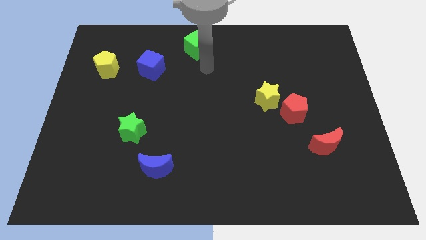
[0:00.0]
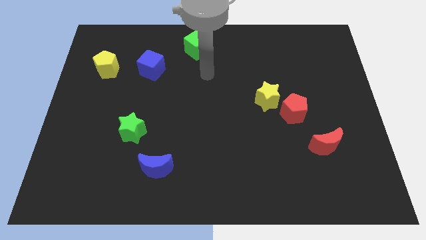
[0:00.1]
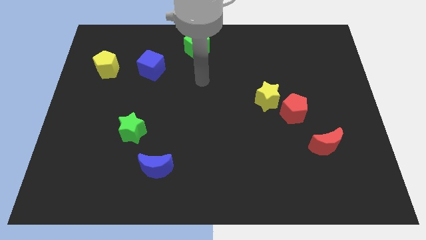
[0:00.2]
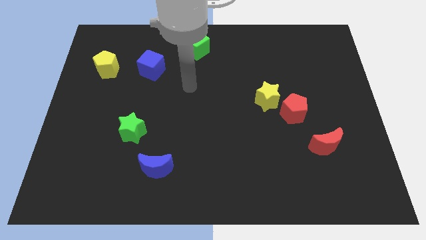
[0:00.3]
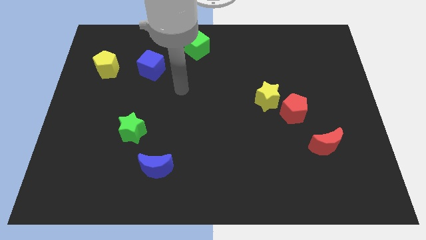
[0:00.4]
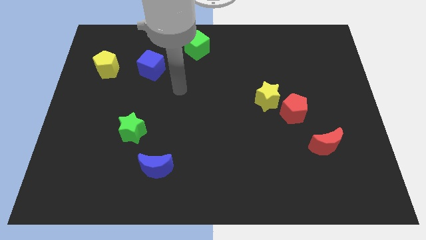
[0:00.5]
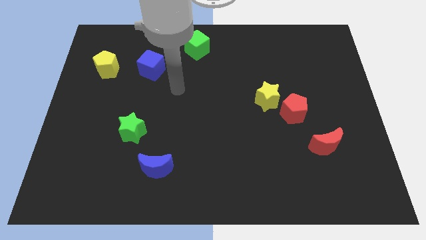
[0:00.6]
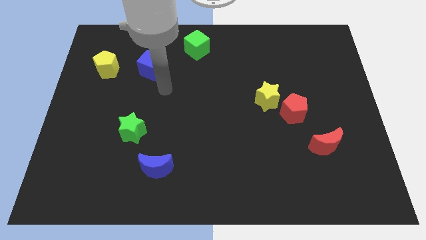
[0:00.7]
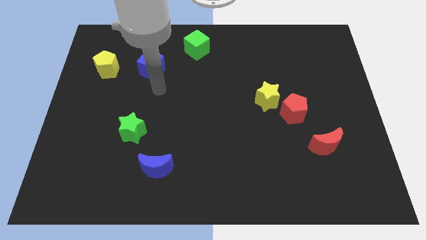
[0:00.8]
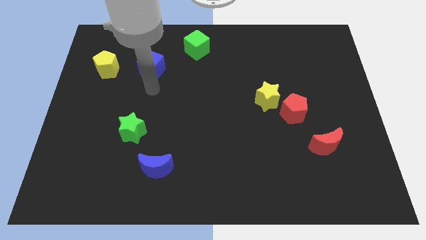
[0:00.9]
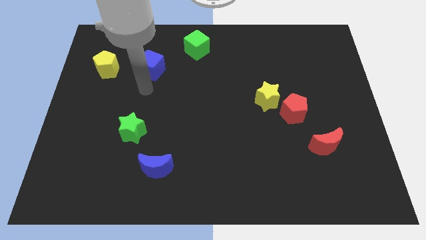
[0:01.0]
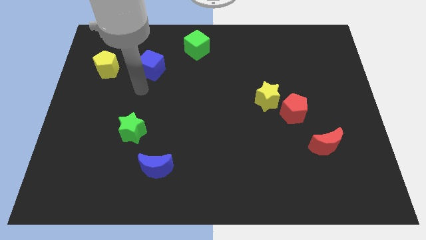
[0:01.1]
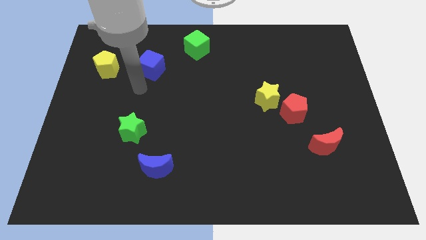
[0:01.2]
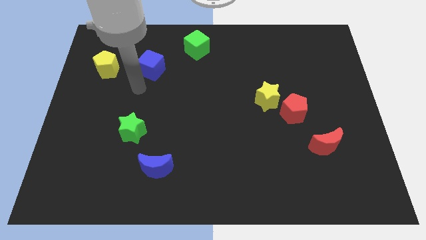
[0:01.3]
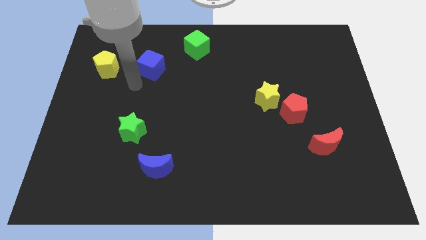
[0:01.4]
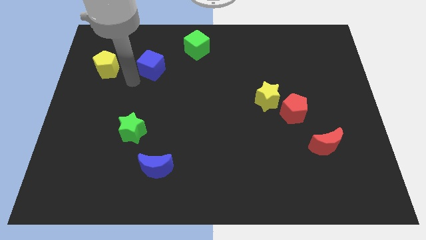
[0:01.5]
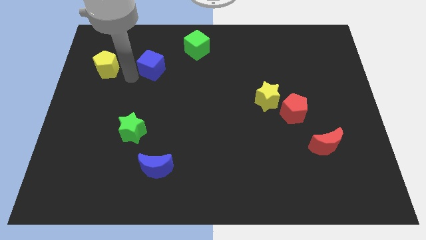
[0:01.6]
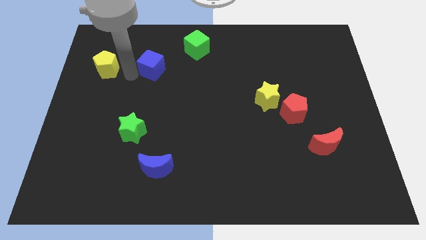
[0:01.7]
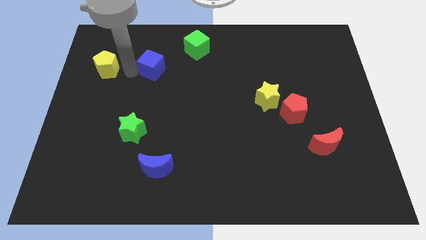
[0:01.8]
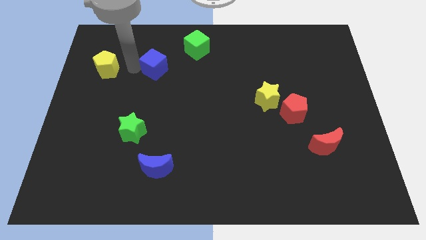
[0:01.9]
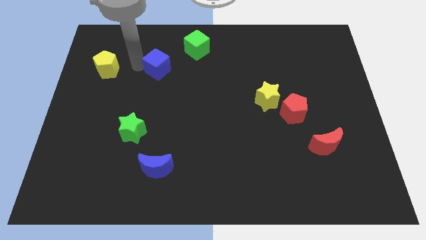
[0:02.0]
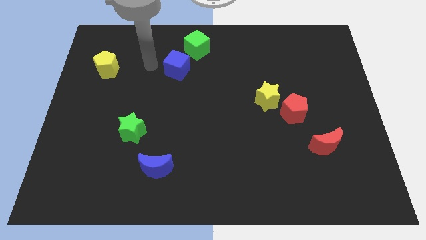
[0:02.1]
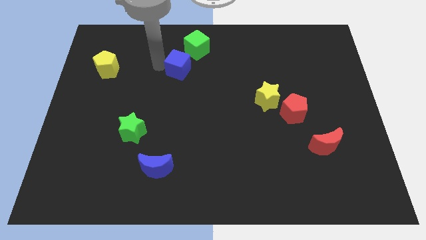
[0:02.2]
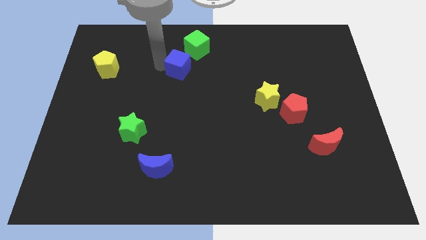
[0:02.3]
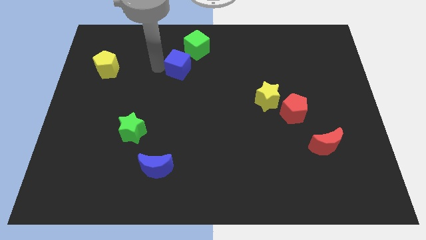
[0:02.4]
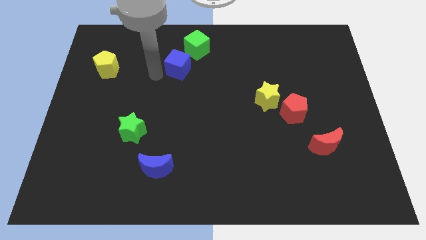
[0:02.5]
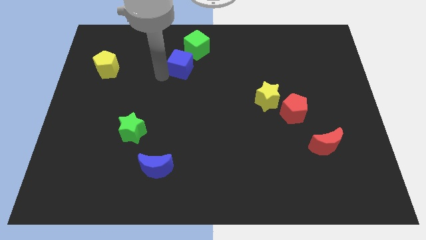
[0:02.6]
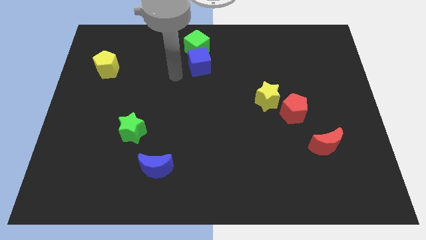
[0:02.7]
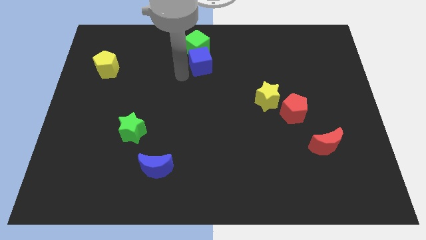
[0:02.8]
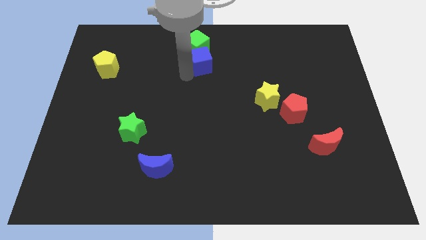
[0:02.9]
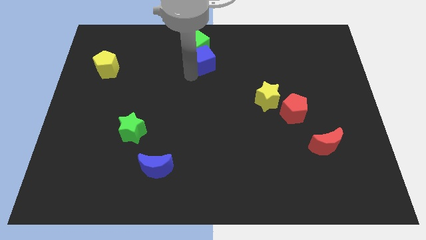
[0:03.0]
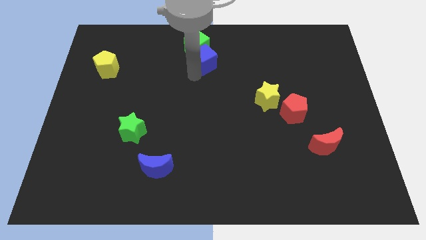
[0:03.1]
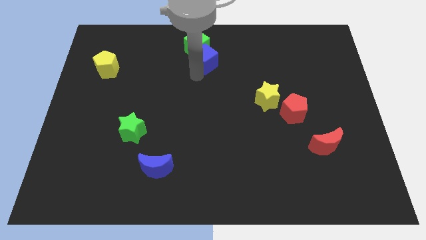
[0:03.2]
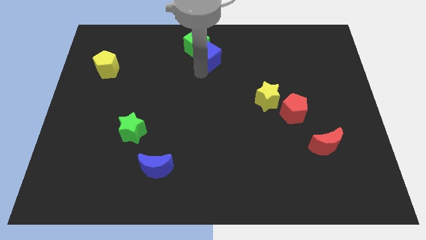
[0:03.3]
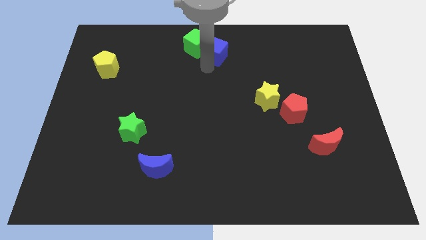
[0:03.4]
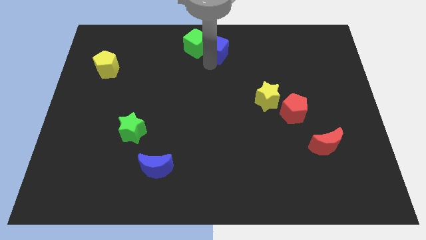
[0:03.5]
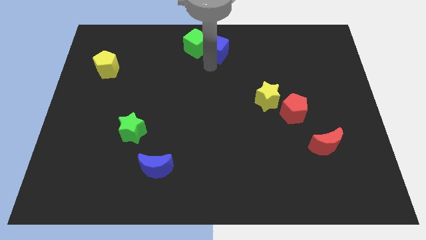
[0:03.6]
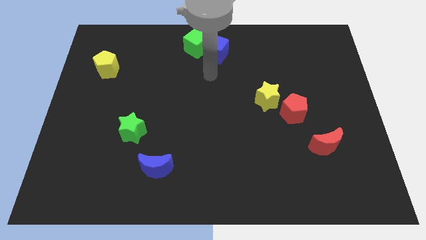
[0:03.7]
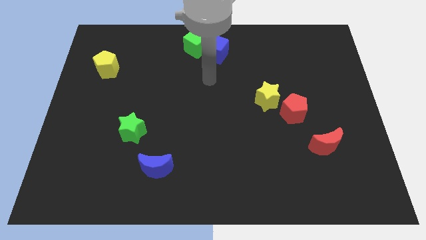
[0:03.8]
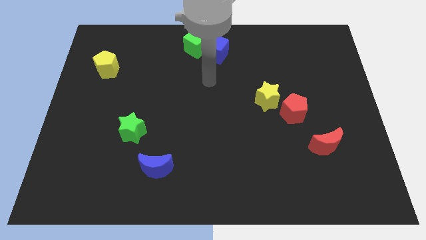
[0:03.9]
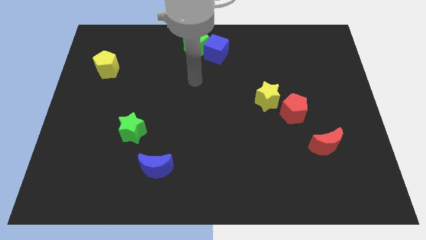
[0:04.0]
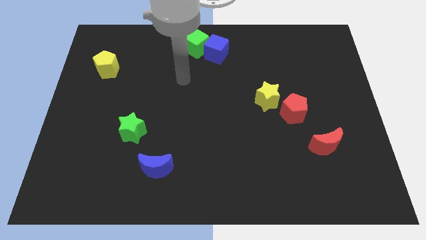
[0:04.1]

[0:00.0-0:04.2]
put the blue cube on the right side of the green cube

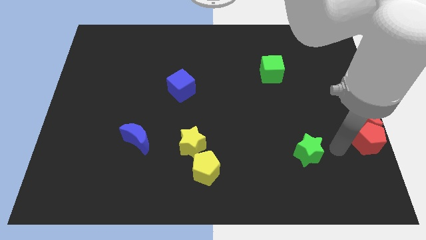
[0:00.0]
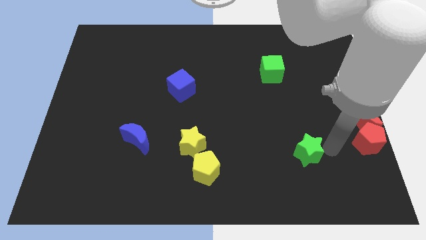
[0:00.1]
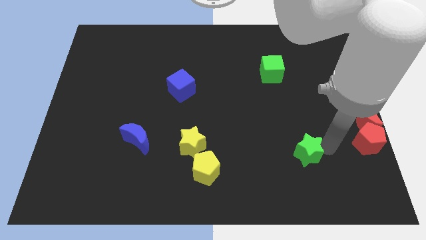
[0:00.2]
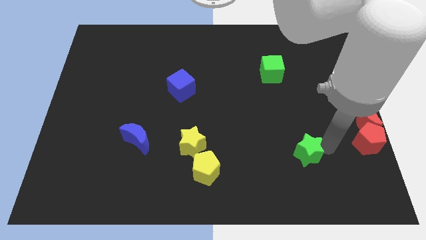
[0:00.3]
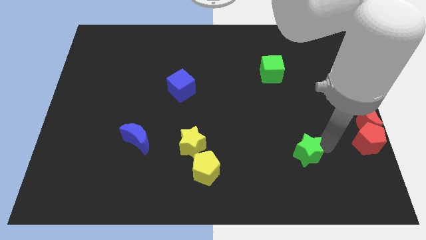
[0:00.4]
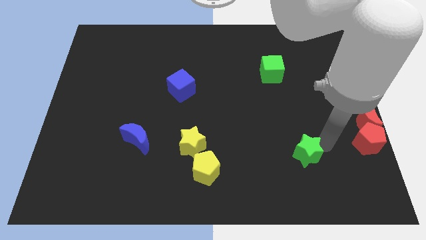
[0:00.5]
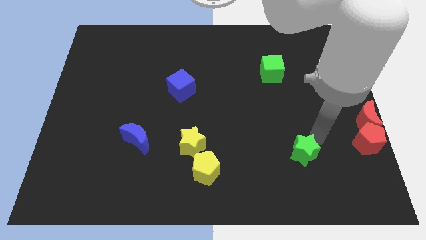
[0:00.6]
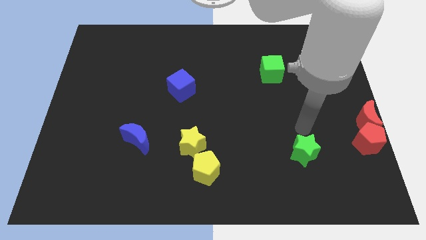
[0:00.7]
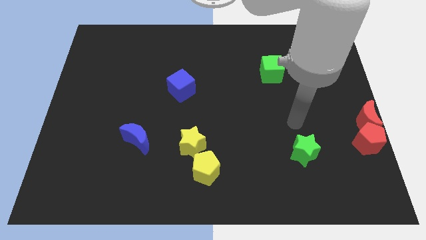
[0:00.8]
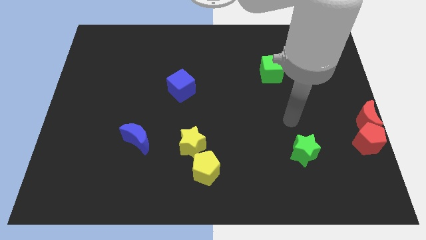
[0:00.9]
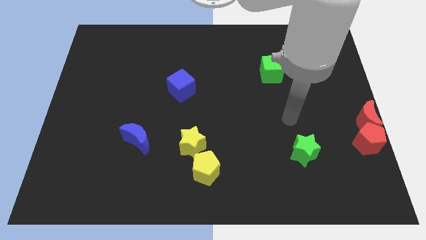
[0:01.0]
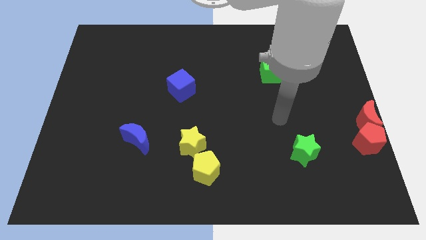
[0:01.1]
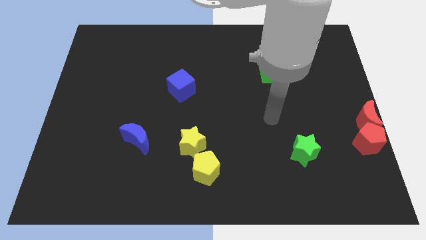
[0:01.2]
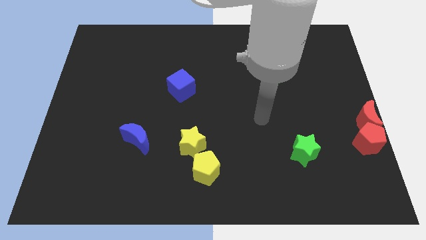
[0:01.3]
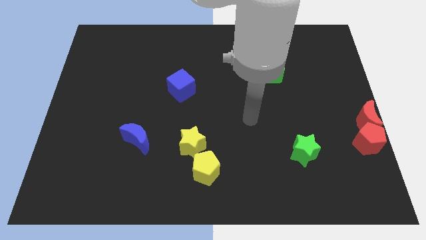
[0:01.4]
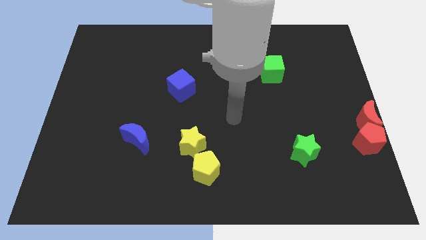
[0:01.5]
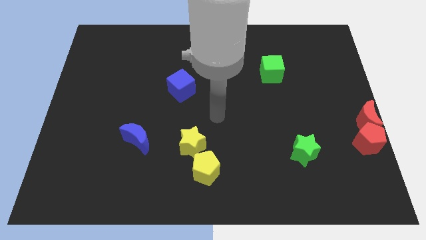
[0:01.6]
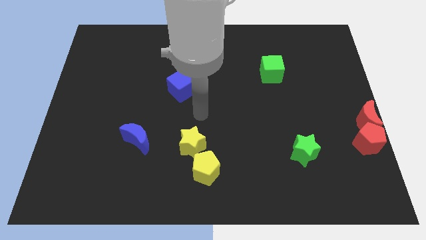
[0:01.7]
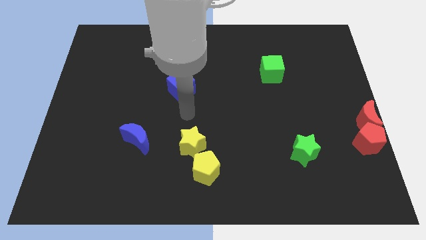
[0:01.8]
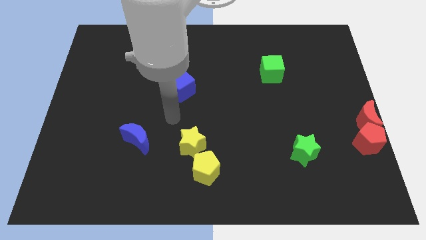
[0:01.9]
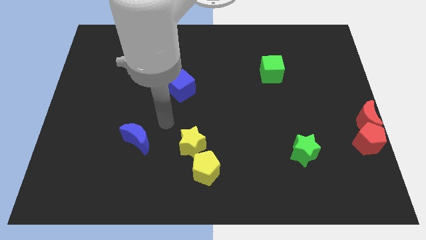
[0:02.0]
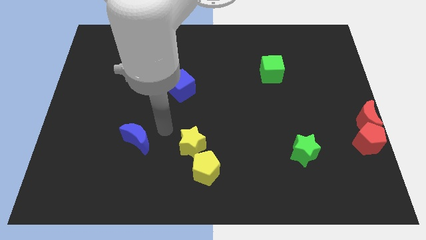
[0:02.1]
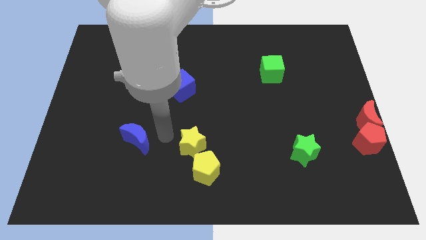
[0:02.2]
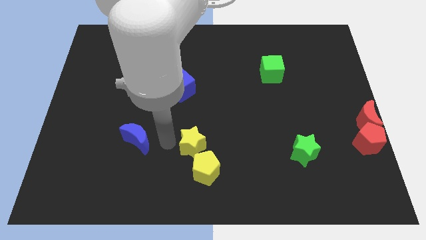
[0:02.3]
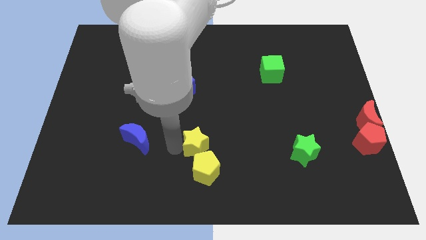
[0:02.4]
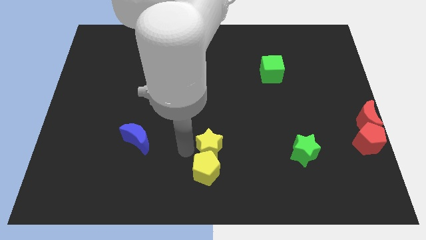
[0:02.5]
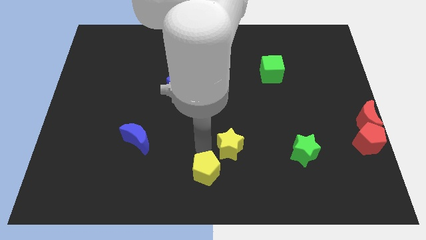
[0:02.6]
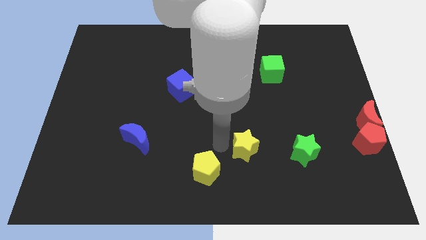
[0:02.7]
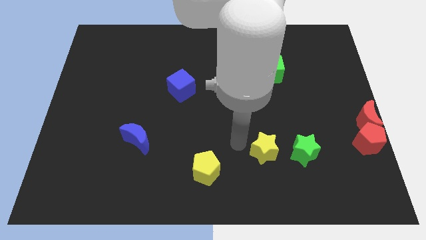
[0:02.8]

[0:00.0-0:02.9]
slide the yellow star to the right

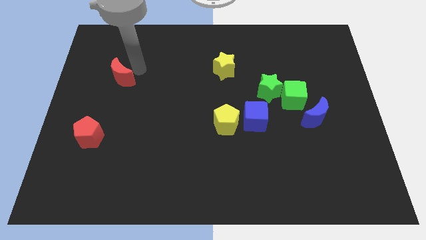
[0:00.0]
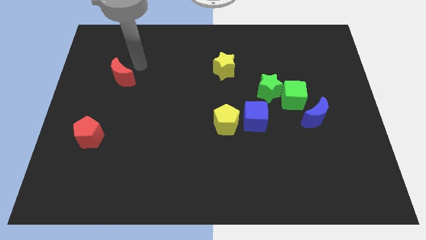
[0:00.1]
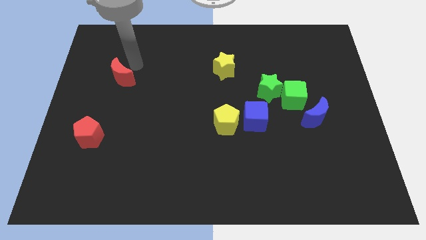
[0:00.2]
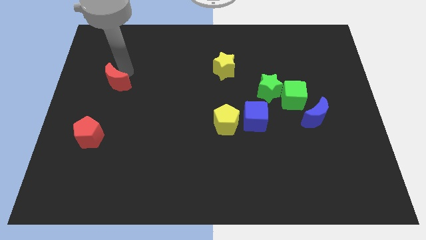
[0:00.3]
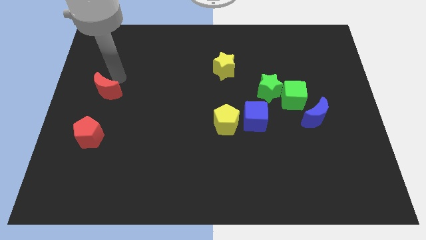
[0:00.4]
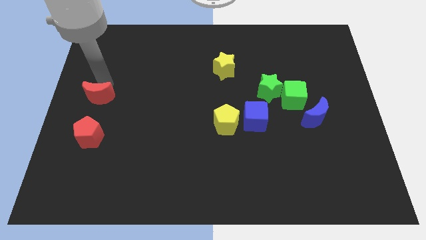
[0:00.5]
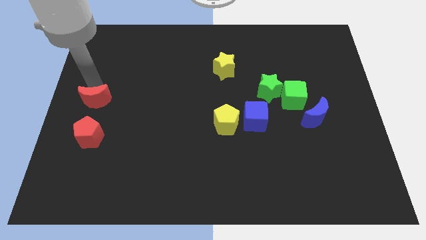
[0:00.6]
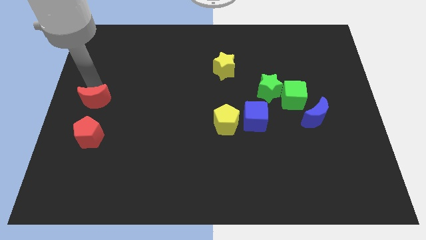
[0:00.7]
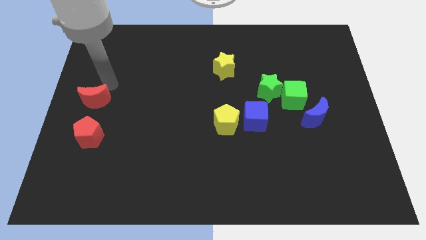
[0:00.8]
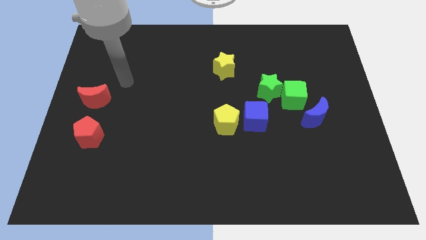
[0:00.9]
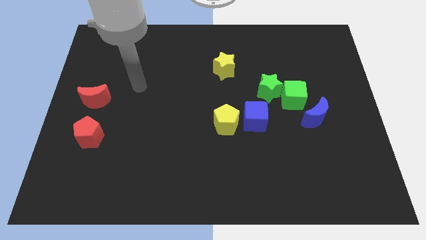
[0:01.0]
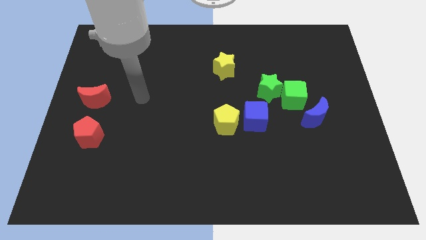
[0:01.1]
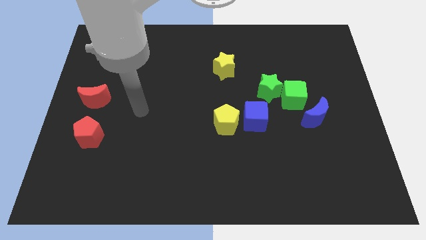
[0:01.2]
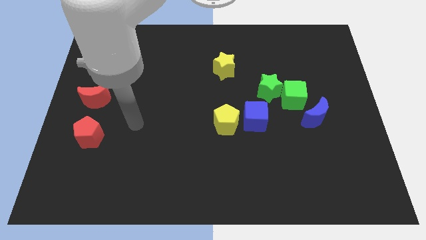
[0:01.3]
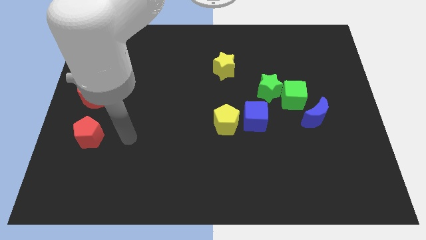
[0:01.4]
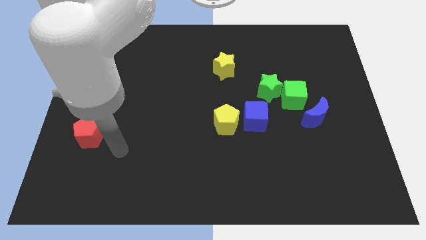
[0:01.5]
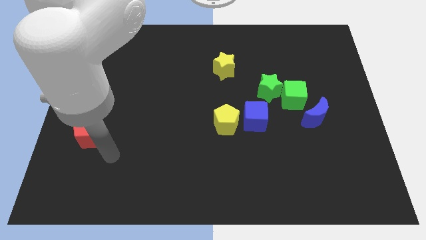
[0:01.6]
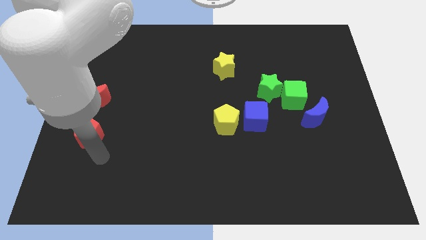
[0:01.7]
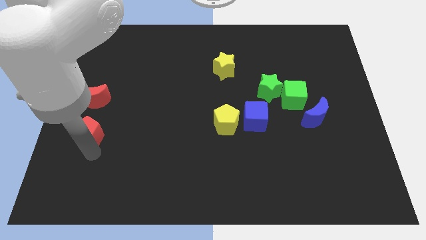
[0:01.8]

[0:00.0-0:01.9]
move the red crescent to the top of the red pentagon
